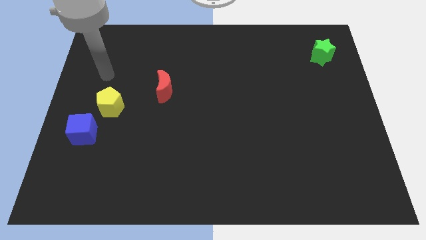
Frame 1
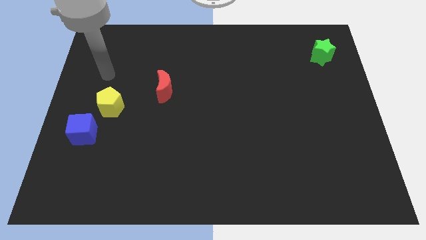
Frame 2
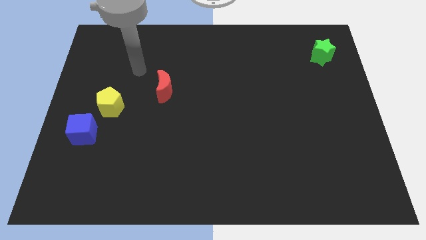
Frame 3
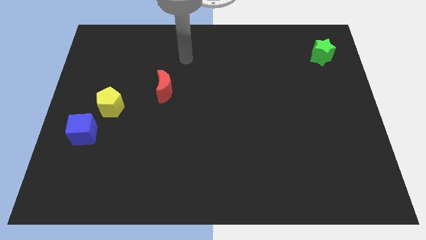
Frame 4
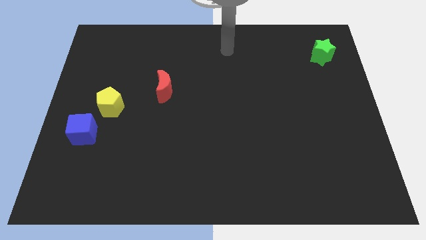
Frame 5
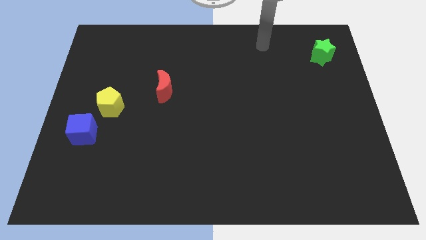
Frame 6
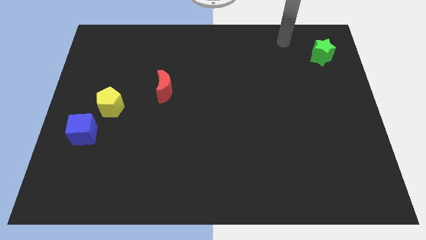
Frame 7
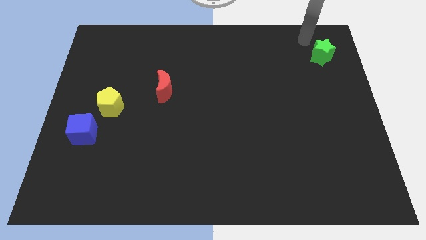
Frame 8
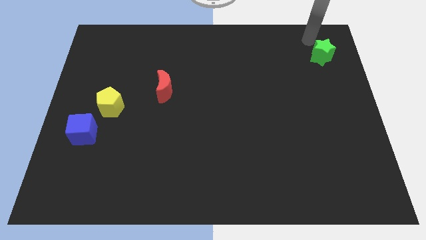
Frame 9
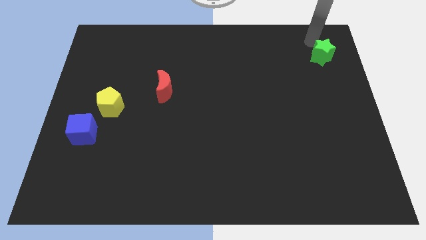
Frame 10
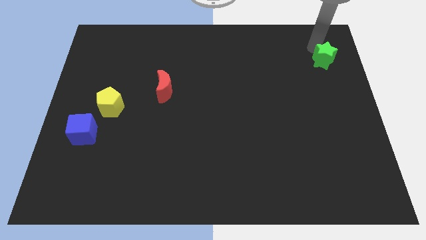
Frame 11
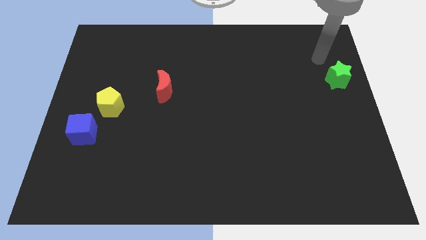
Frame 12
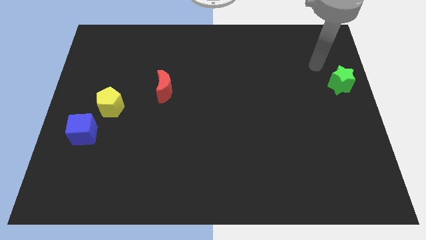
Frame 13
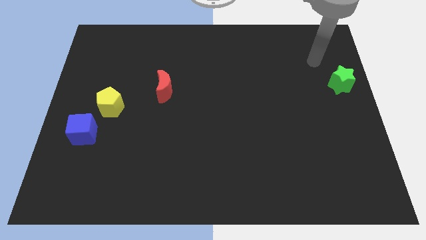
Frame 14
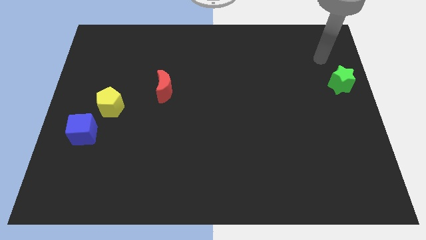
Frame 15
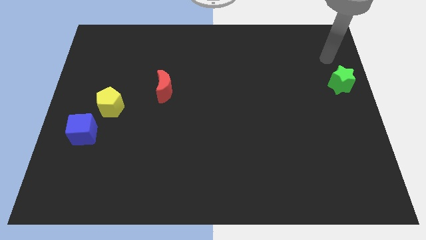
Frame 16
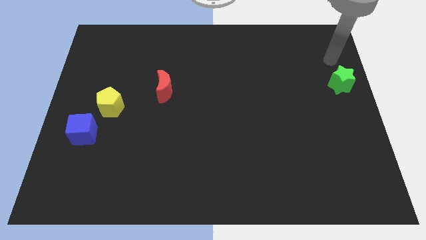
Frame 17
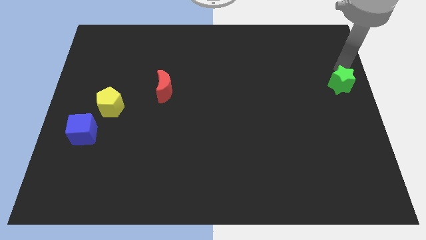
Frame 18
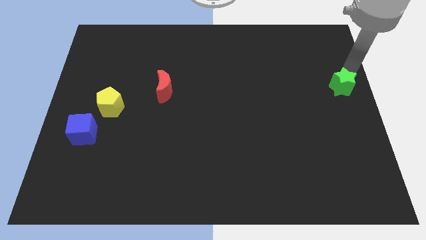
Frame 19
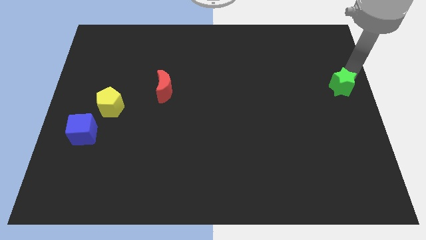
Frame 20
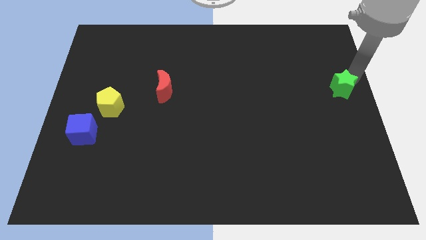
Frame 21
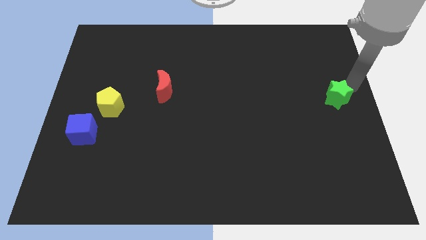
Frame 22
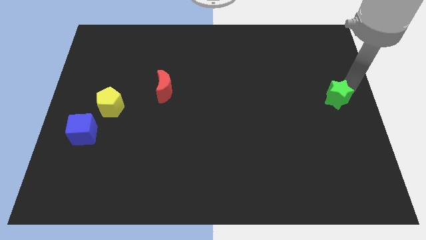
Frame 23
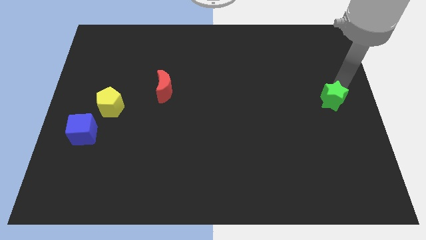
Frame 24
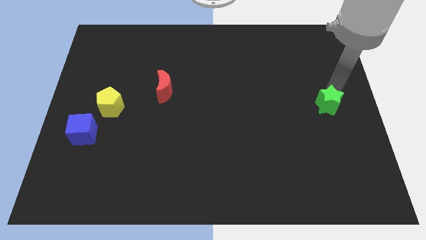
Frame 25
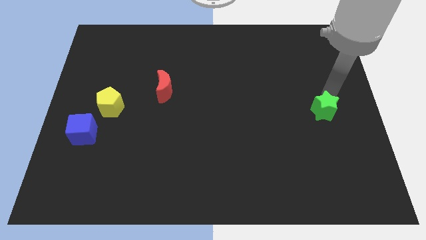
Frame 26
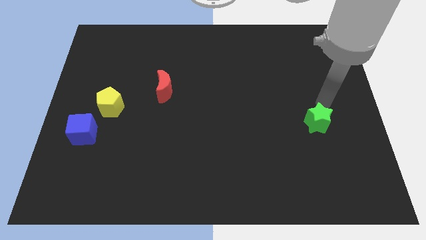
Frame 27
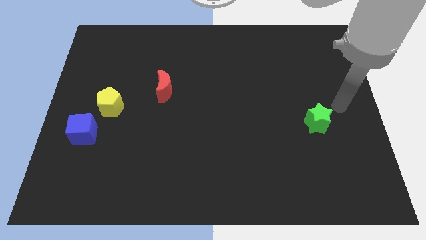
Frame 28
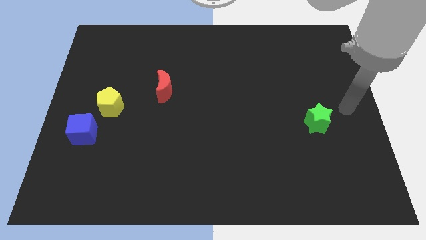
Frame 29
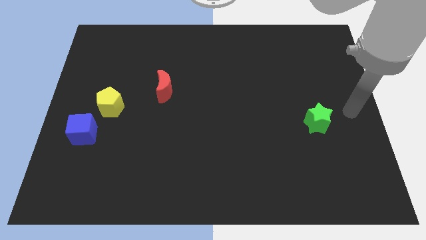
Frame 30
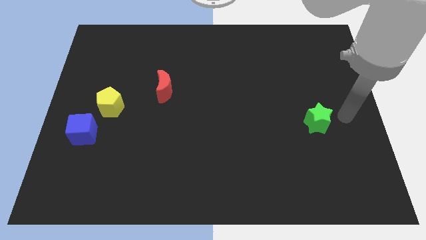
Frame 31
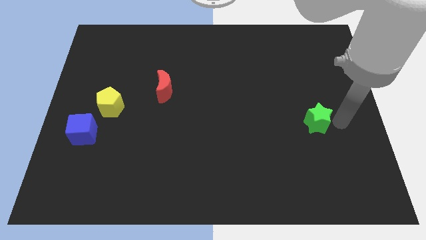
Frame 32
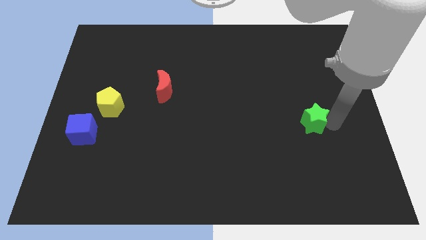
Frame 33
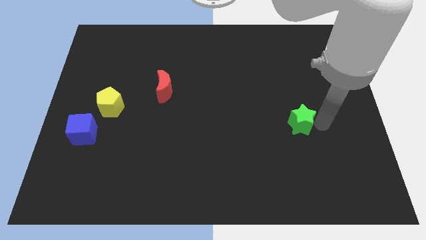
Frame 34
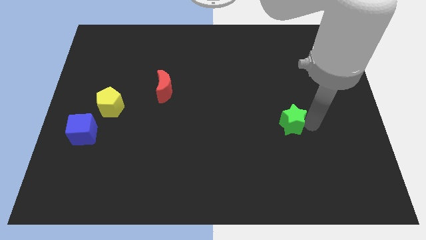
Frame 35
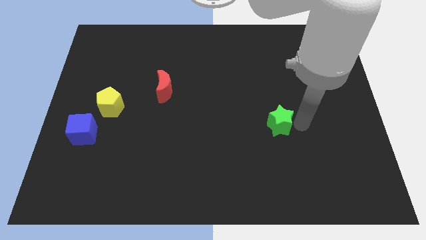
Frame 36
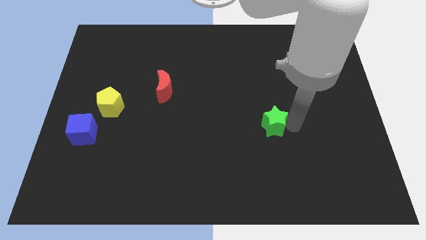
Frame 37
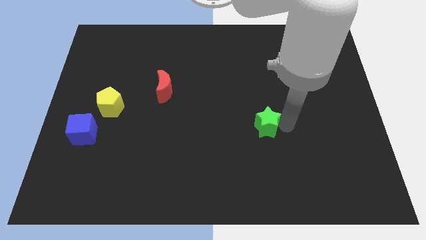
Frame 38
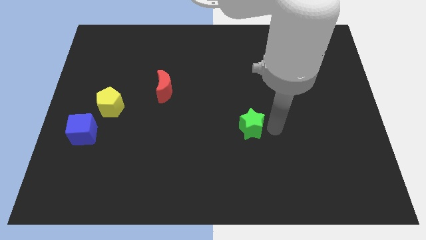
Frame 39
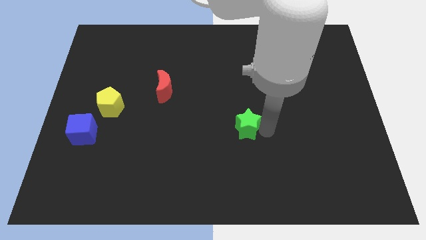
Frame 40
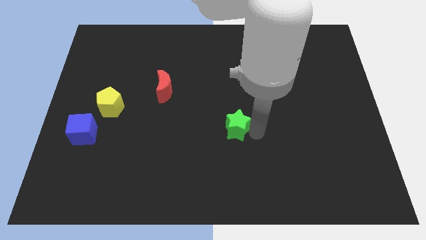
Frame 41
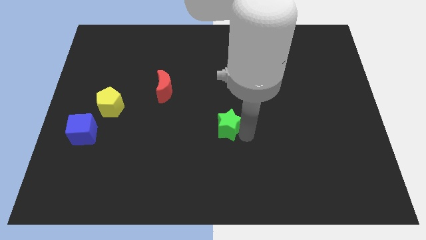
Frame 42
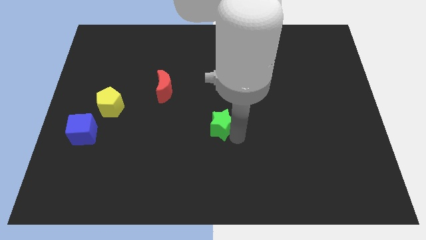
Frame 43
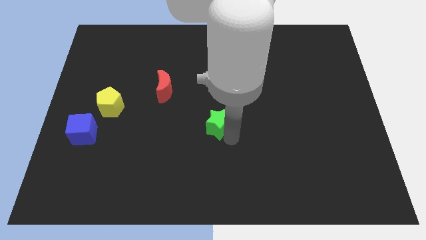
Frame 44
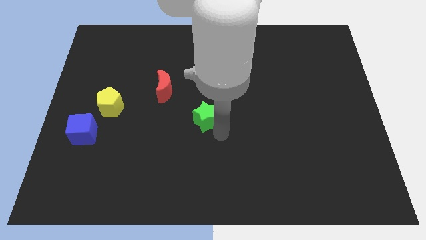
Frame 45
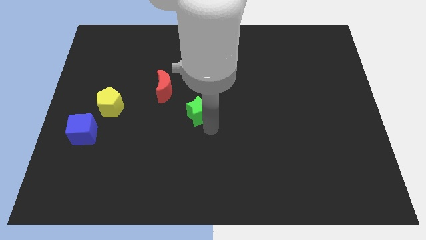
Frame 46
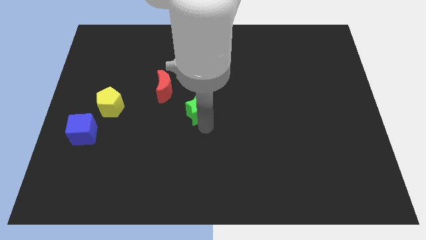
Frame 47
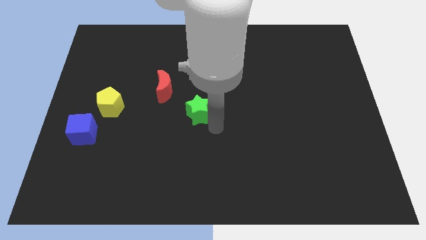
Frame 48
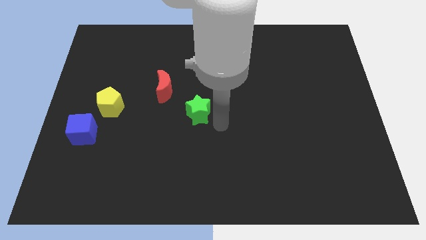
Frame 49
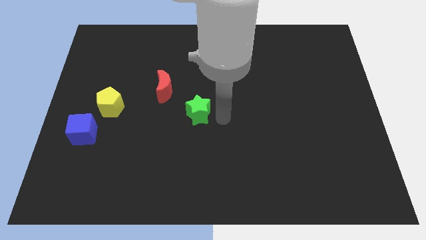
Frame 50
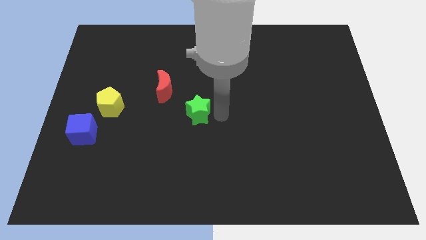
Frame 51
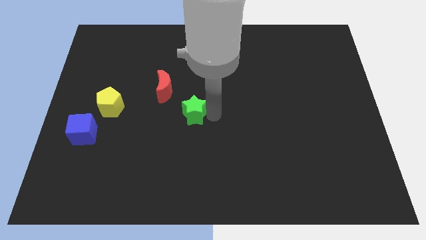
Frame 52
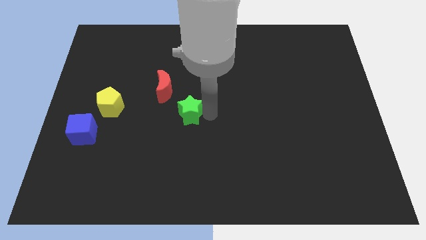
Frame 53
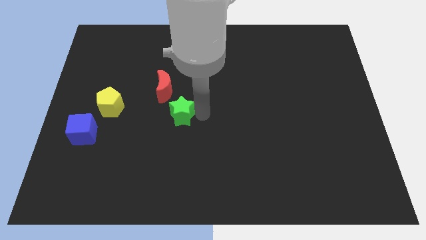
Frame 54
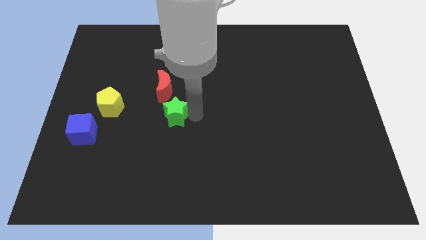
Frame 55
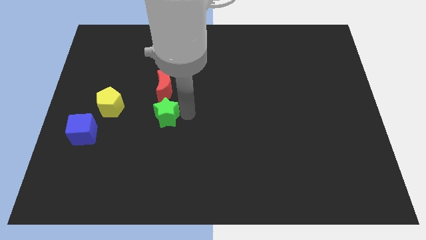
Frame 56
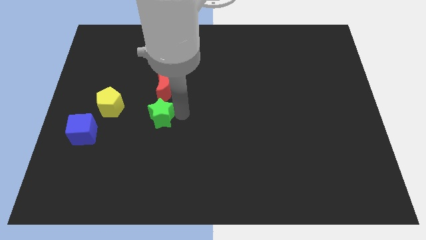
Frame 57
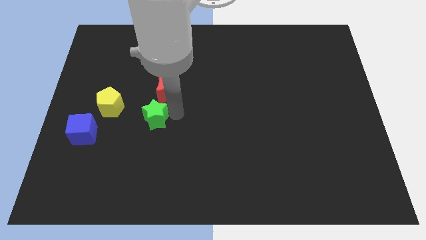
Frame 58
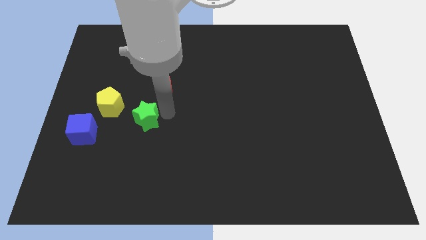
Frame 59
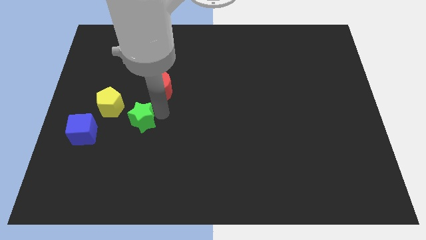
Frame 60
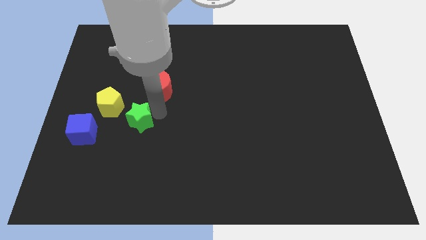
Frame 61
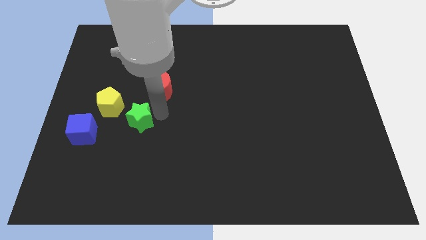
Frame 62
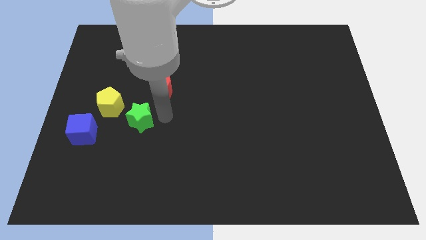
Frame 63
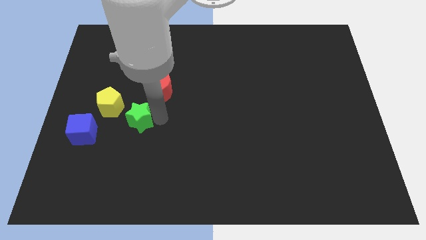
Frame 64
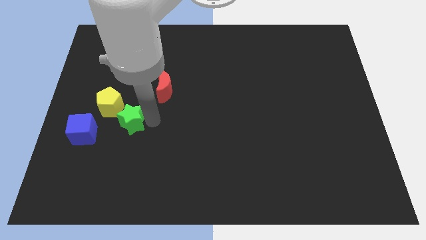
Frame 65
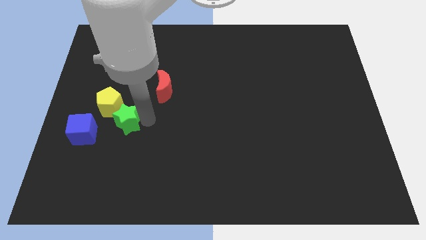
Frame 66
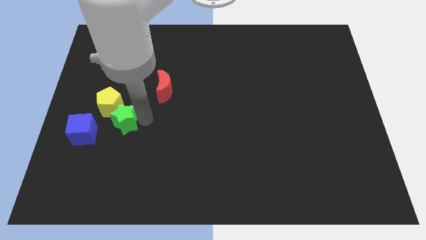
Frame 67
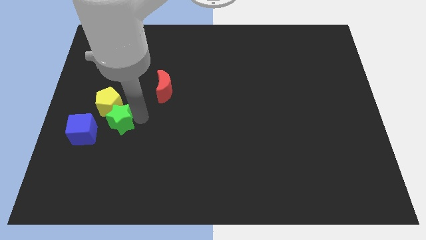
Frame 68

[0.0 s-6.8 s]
push the star next to the yellow block

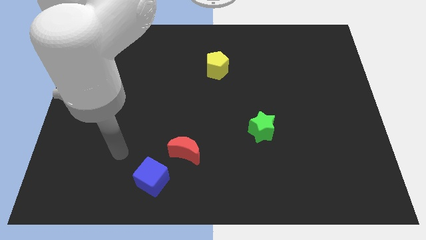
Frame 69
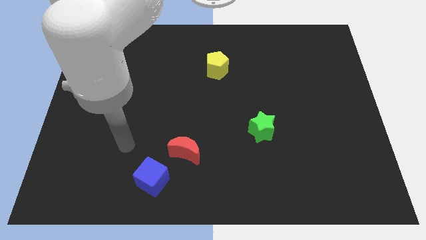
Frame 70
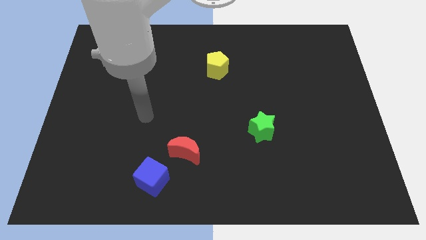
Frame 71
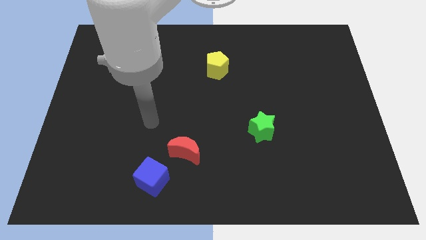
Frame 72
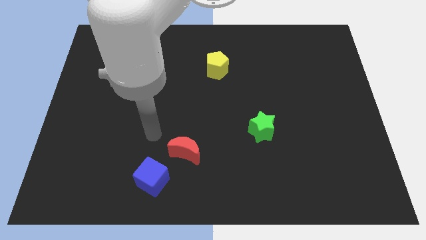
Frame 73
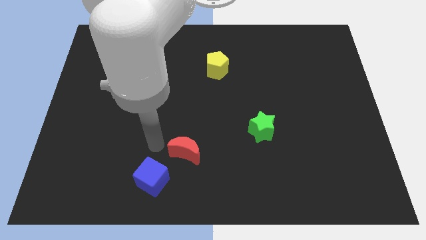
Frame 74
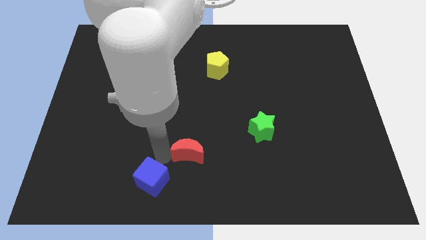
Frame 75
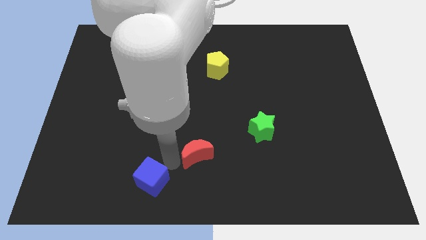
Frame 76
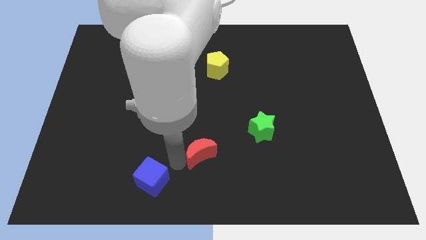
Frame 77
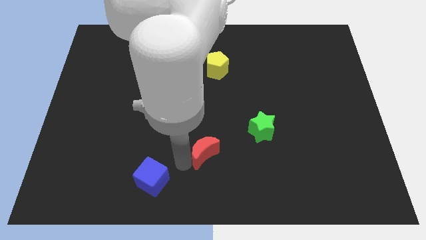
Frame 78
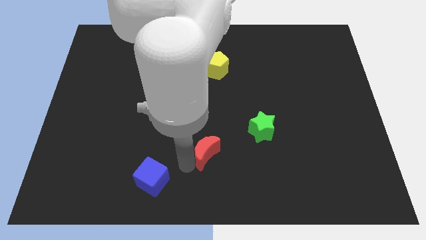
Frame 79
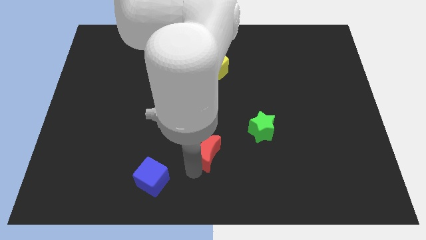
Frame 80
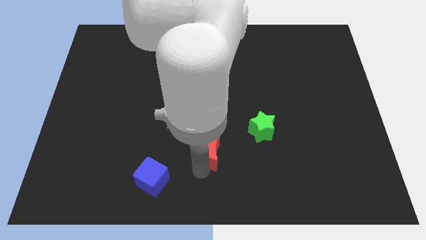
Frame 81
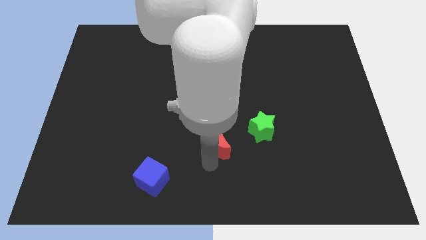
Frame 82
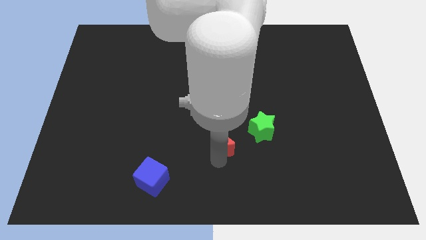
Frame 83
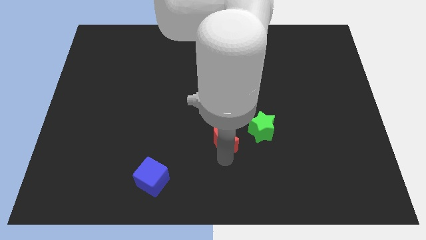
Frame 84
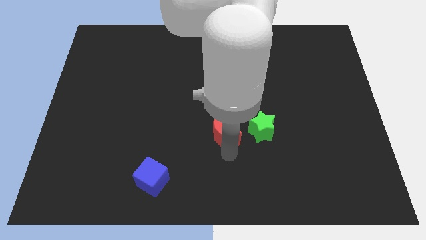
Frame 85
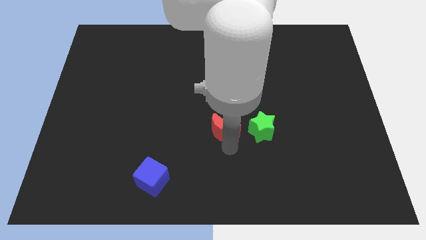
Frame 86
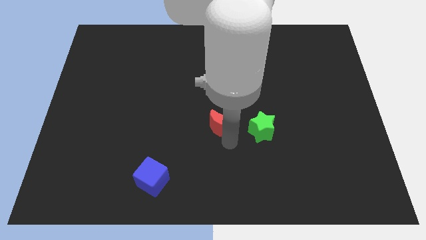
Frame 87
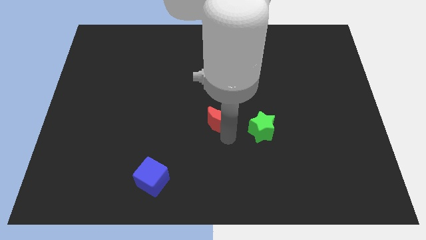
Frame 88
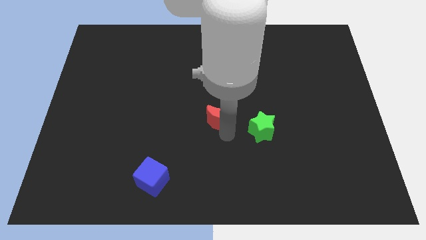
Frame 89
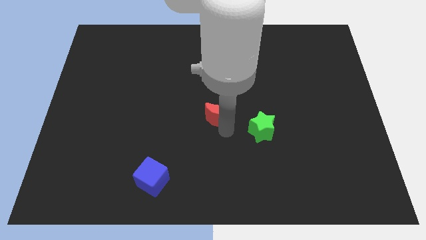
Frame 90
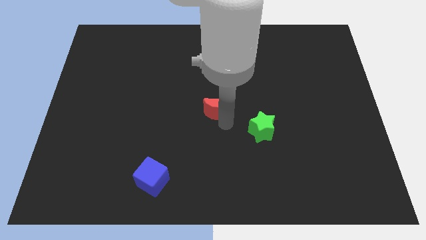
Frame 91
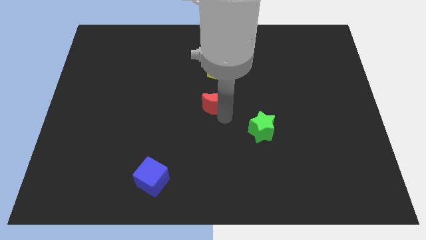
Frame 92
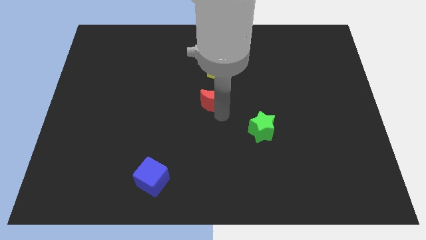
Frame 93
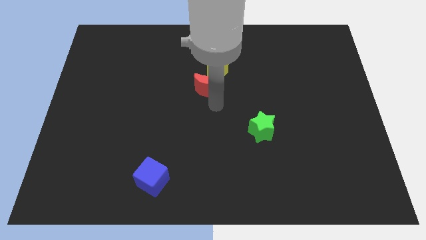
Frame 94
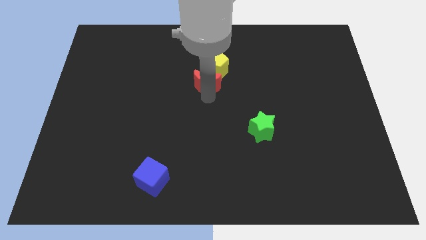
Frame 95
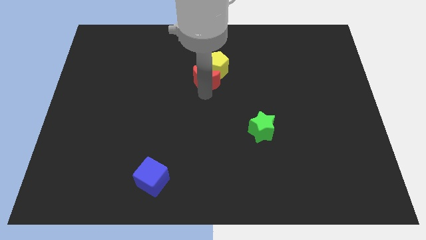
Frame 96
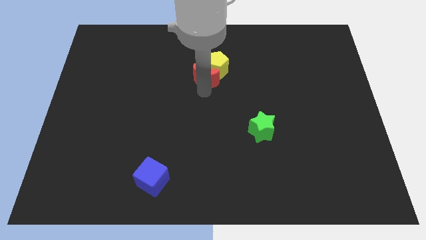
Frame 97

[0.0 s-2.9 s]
put the moon next to the yellow block
